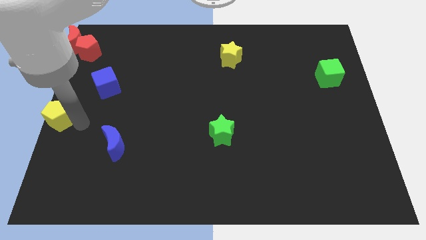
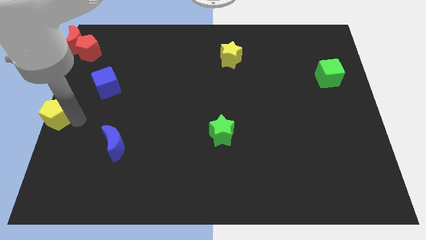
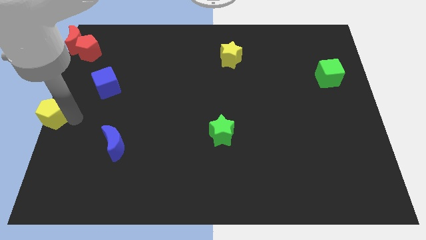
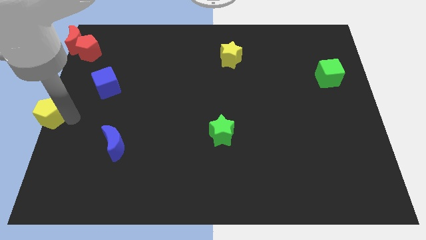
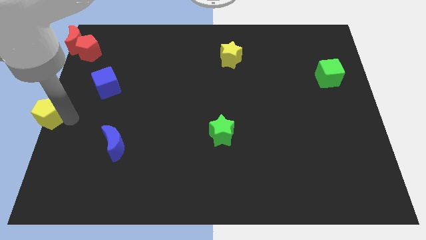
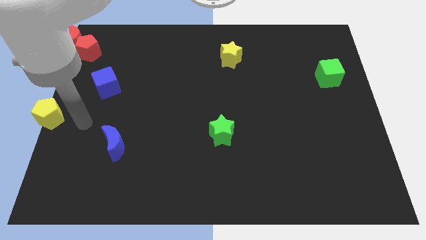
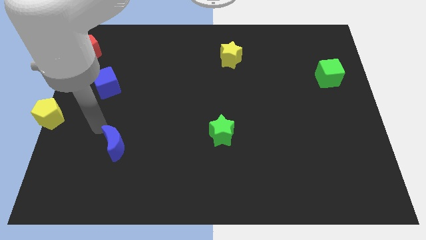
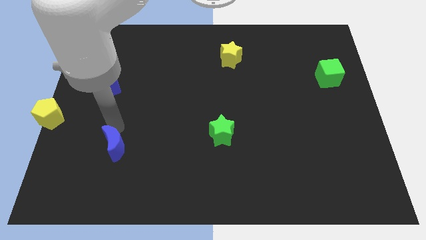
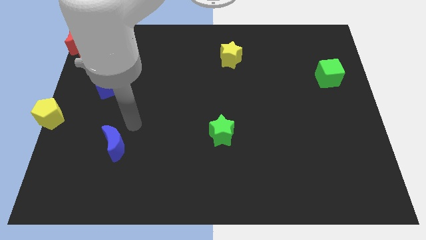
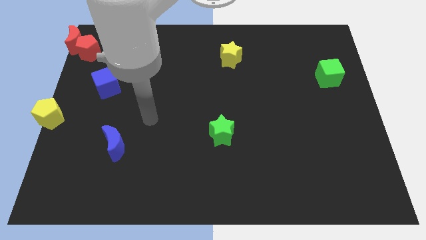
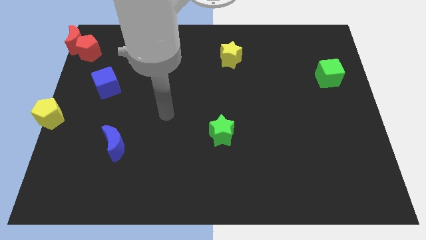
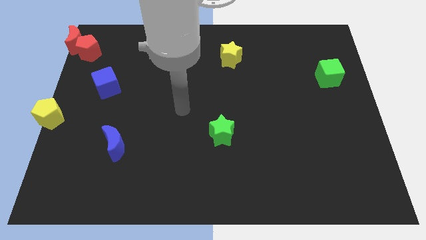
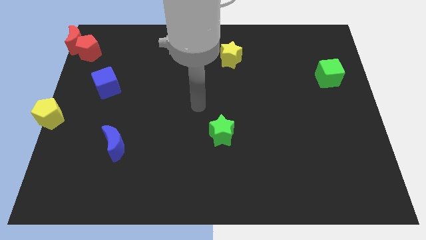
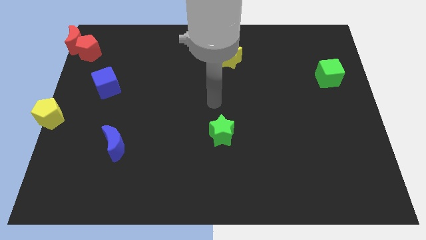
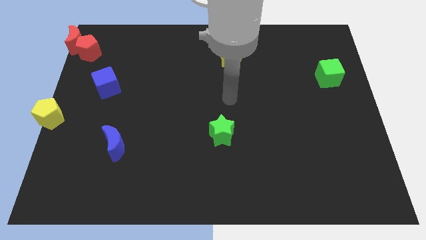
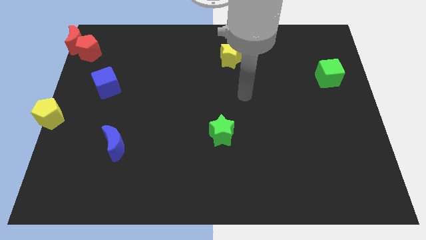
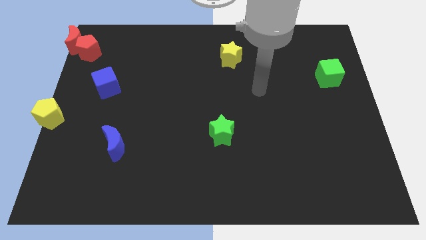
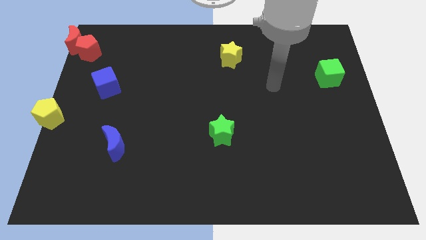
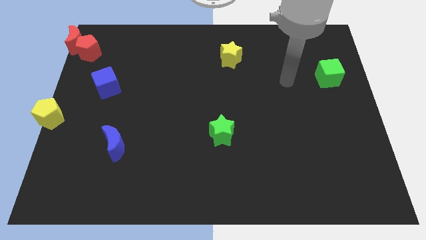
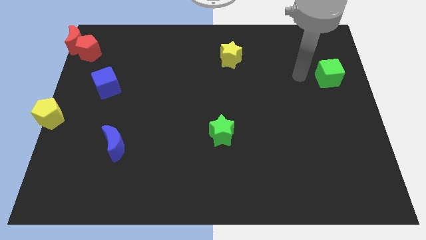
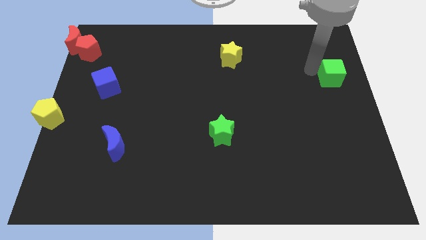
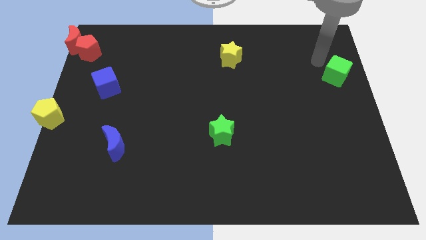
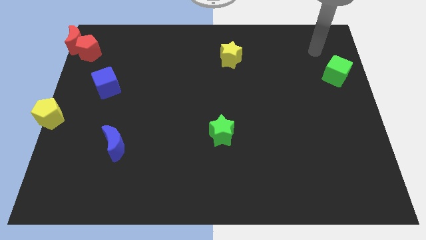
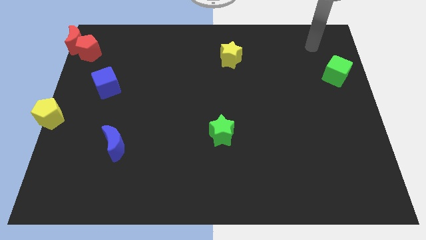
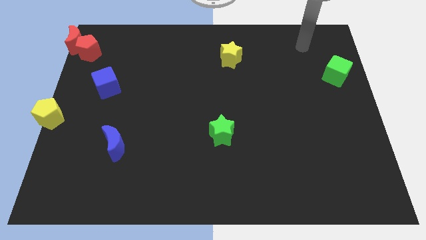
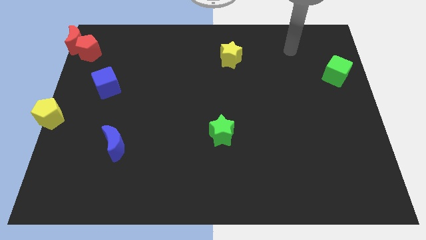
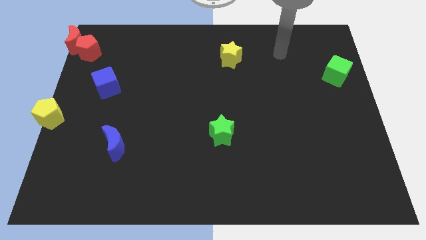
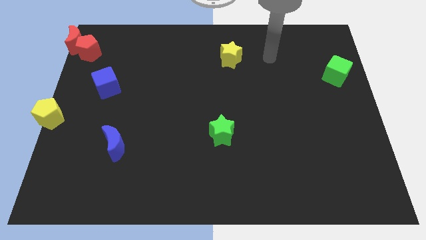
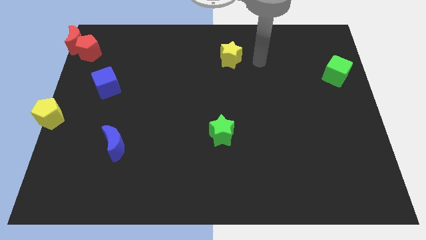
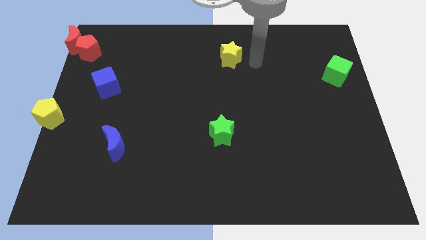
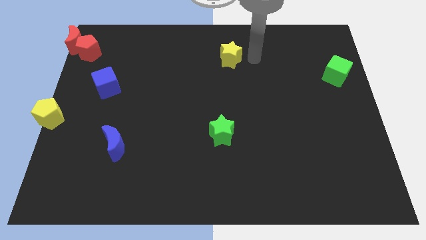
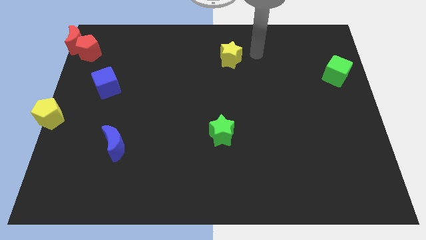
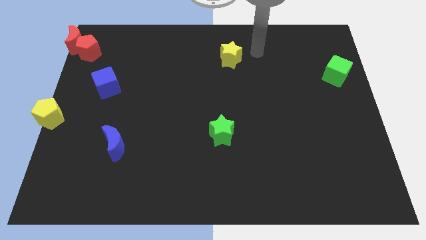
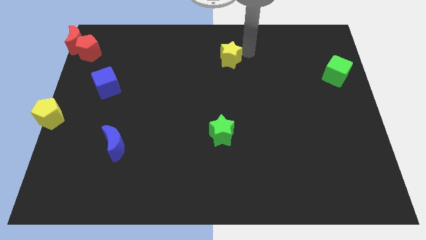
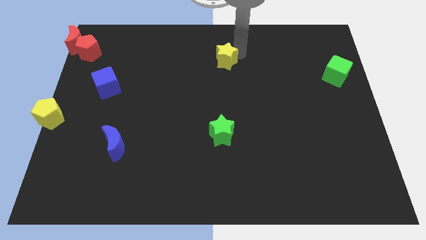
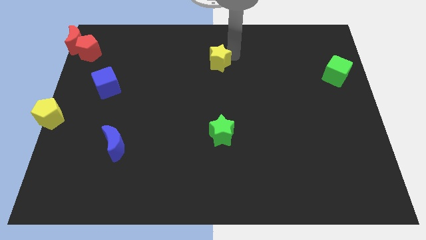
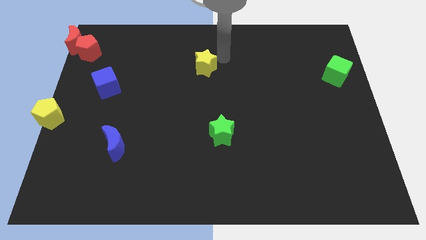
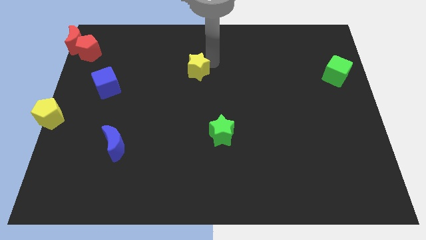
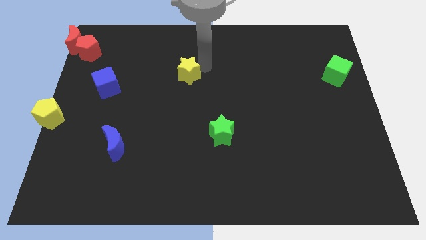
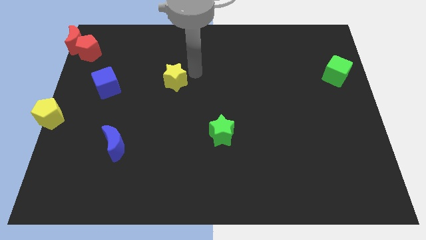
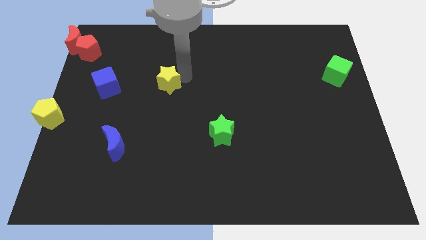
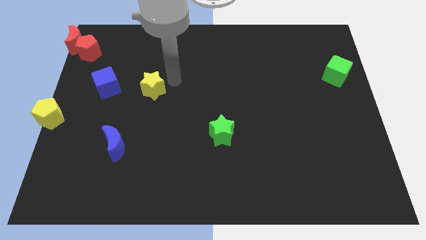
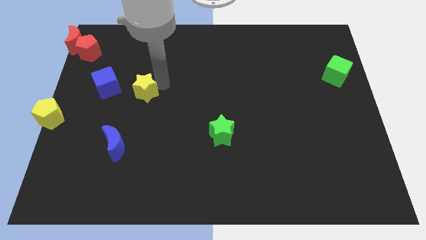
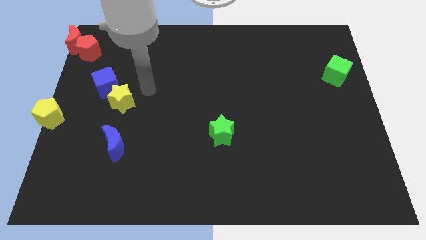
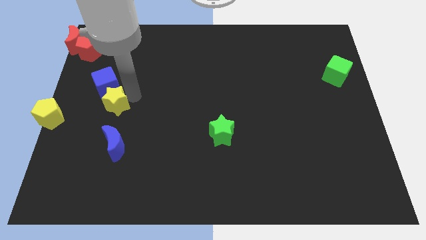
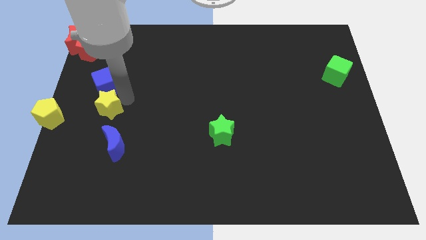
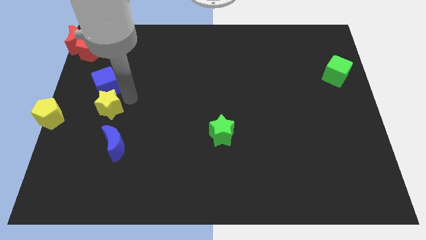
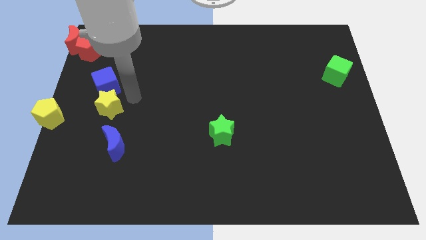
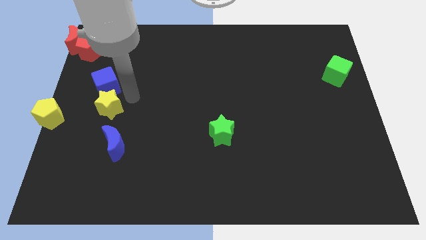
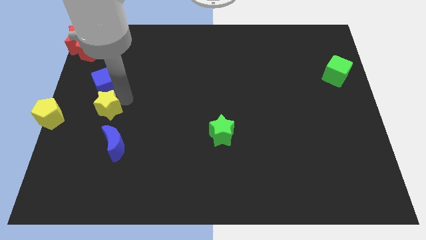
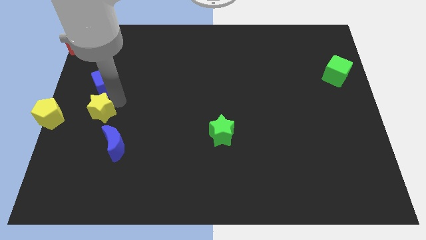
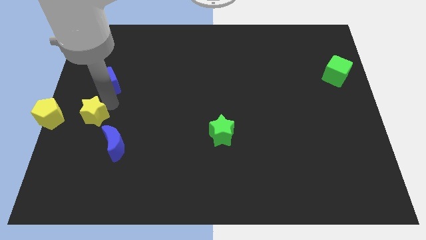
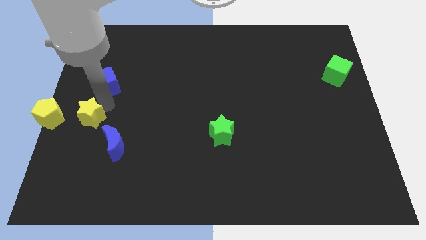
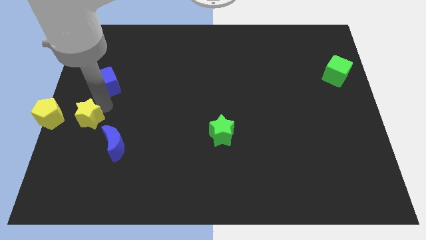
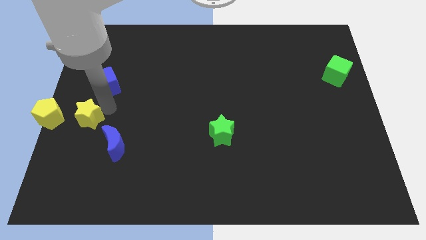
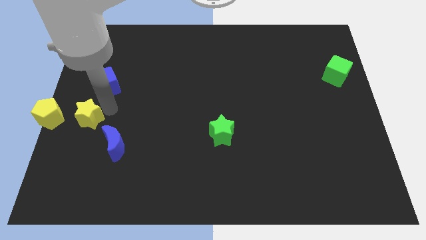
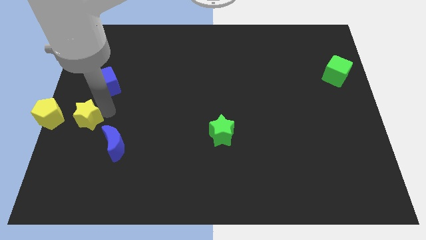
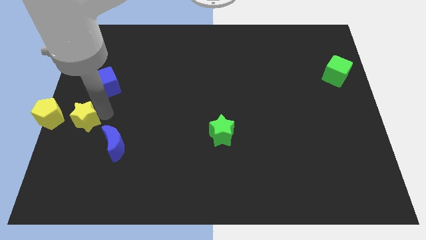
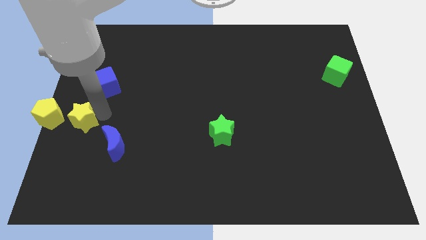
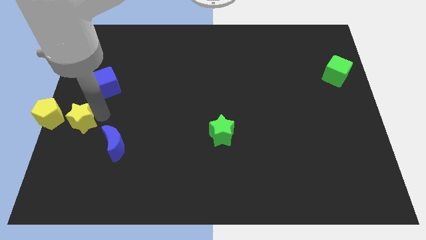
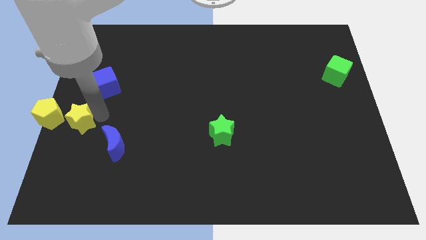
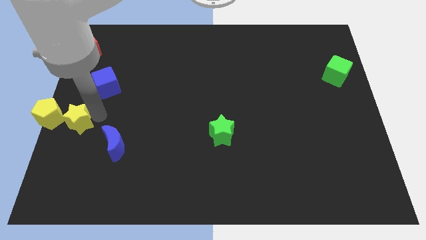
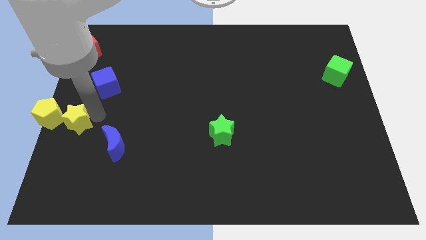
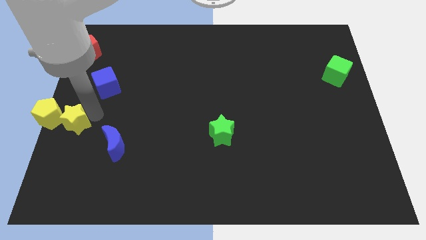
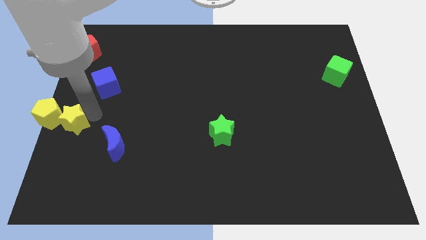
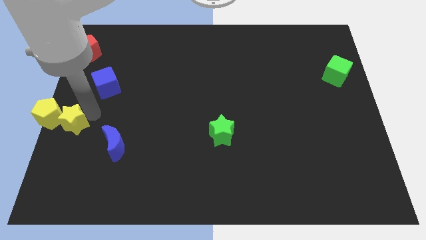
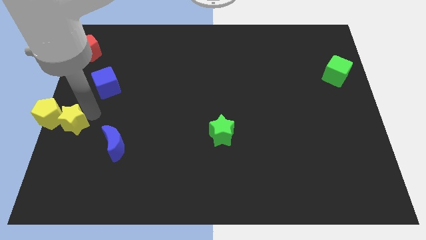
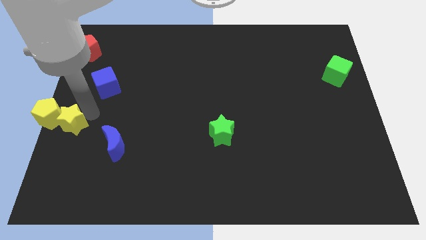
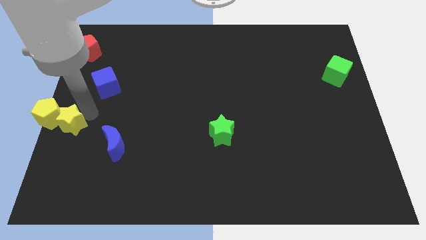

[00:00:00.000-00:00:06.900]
place the yellow star to the right side of the yellow pentagon

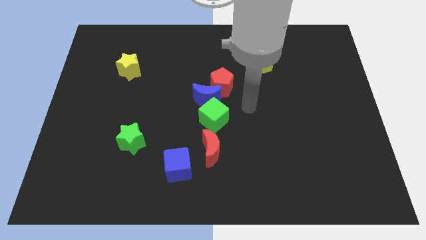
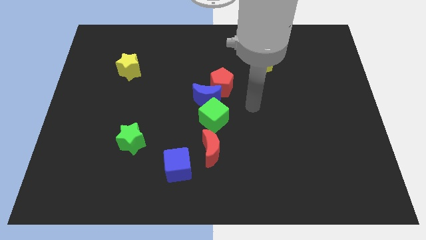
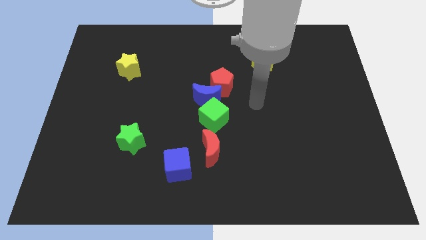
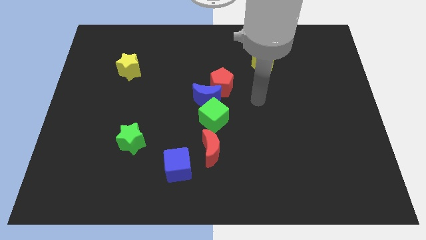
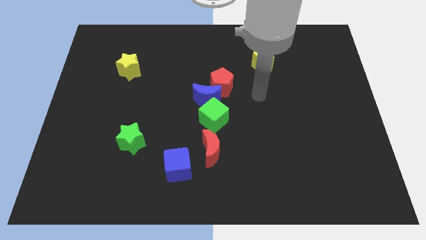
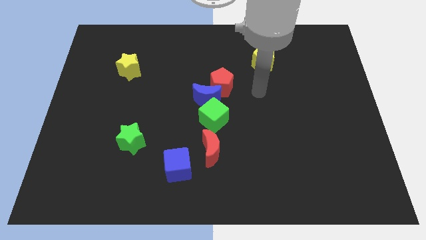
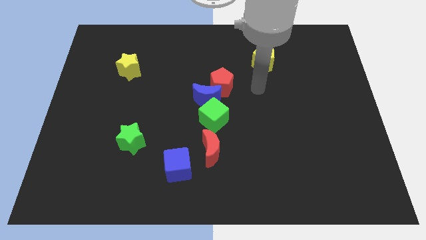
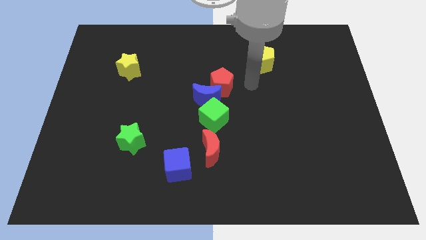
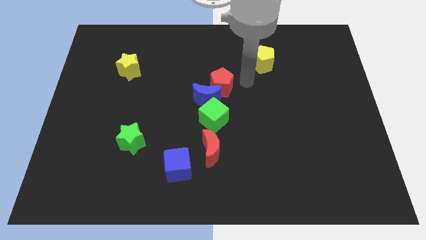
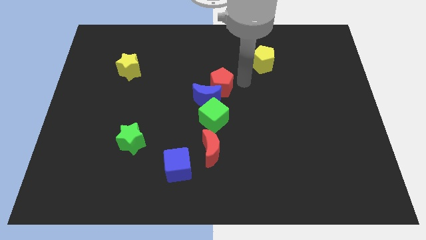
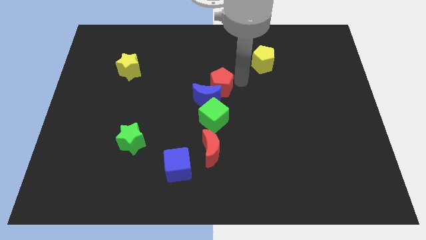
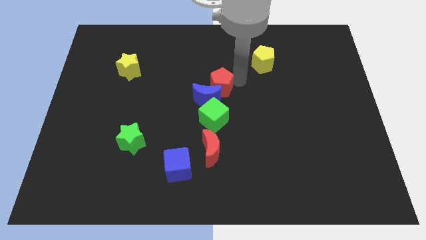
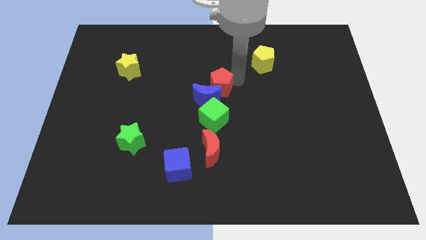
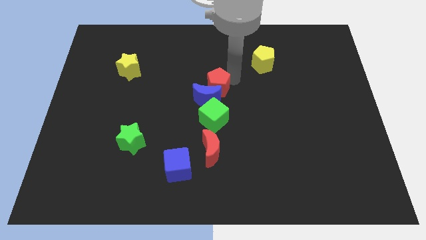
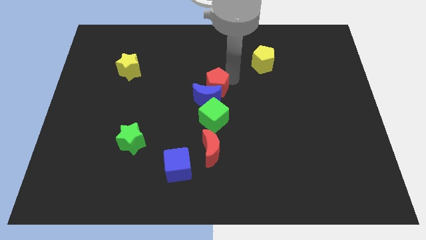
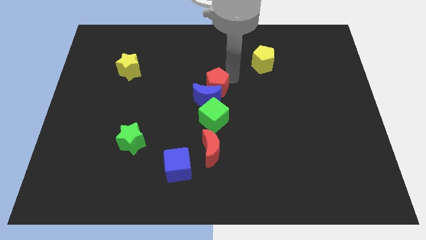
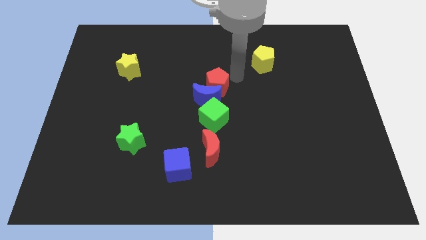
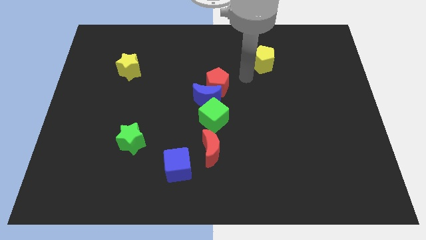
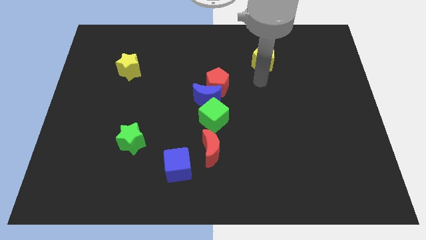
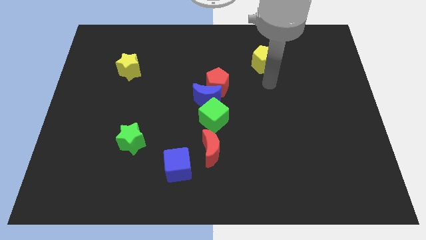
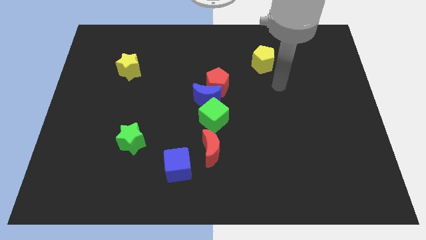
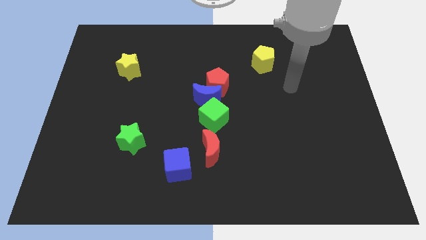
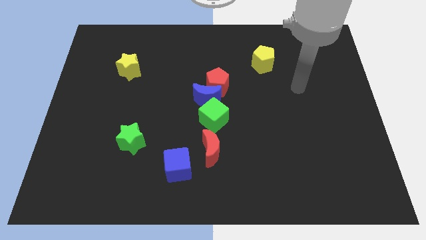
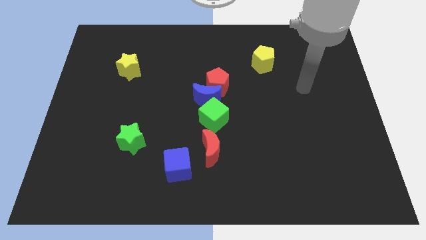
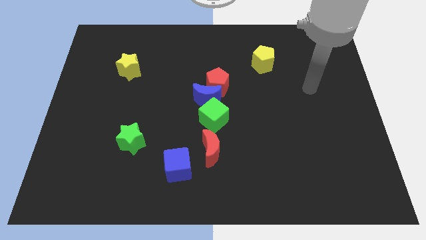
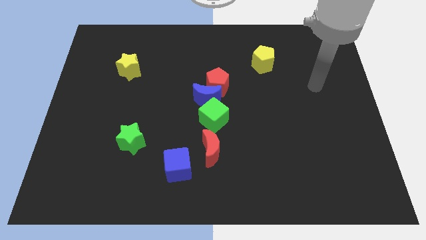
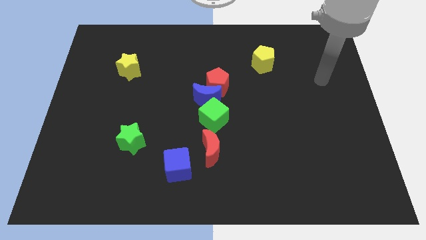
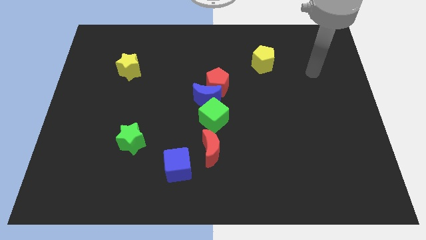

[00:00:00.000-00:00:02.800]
push red pentagon slightly to its left
